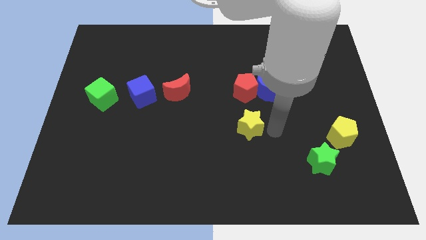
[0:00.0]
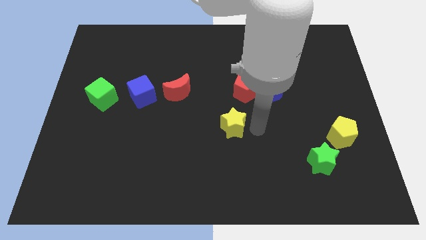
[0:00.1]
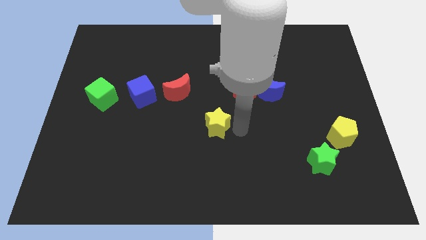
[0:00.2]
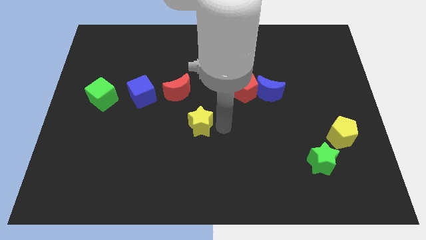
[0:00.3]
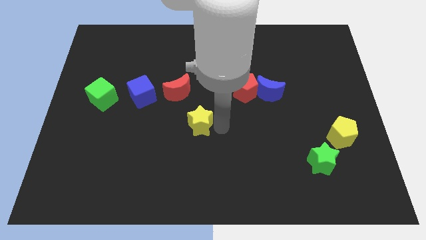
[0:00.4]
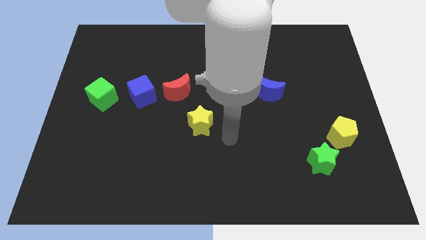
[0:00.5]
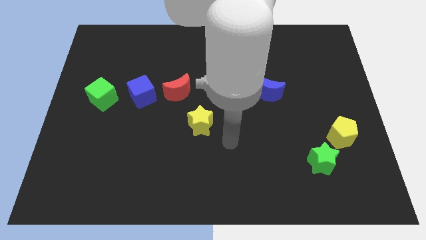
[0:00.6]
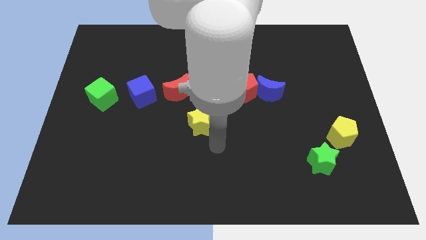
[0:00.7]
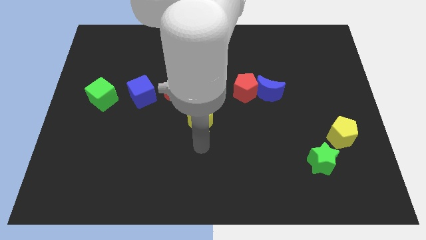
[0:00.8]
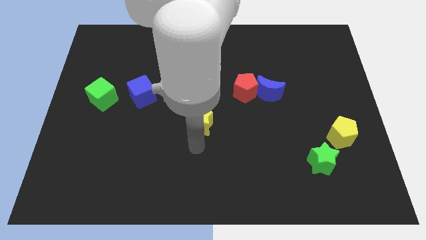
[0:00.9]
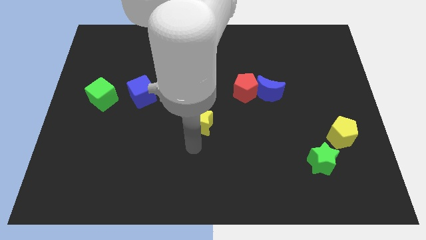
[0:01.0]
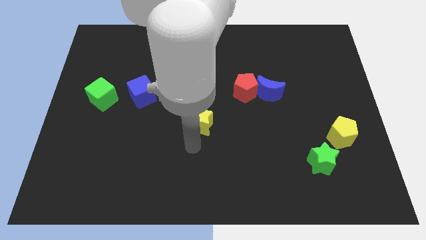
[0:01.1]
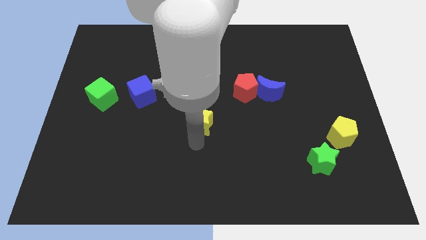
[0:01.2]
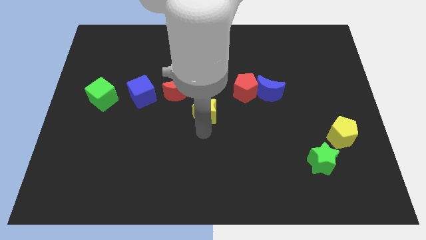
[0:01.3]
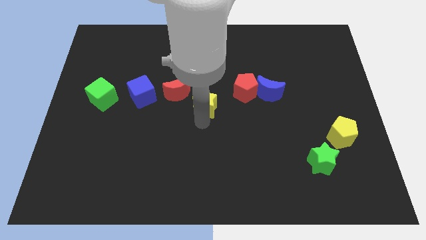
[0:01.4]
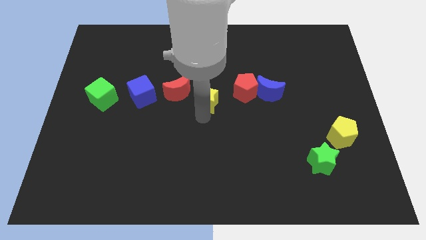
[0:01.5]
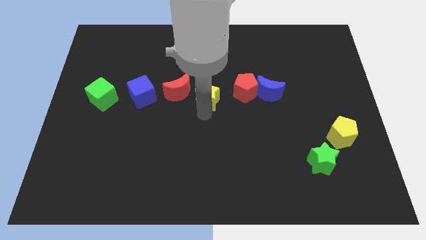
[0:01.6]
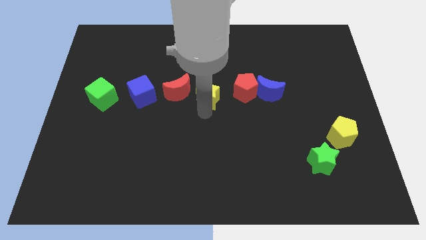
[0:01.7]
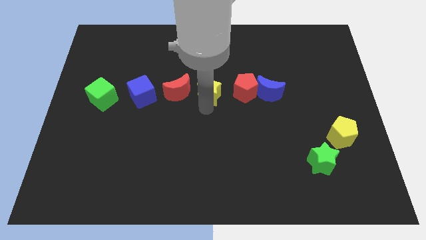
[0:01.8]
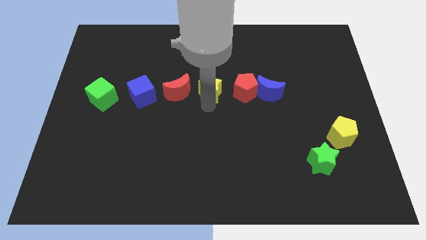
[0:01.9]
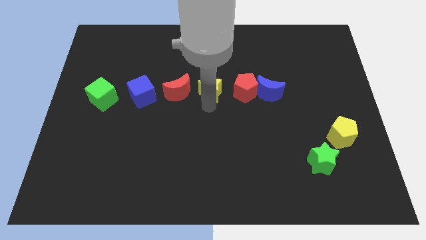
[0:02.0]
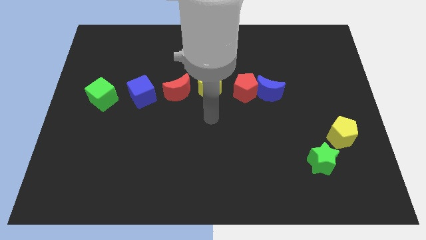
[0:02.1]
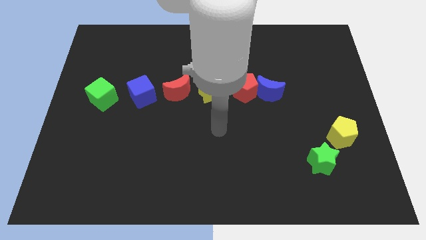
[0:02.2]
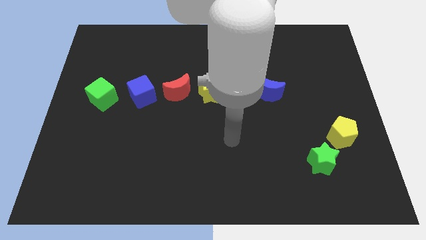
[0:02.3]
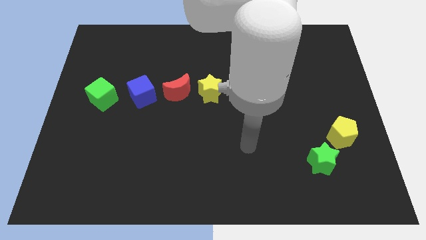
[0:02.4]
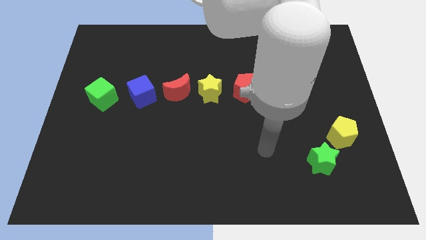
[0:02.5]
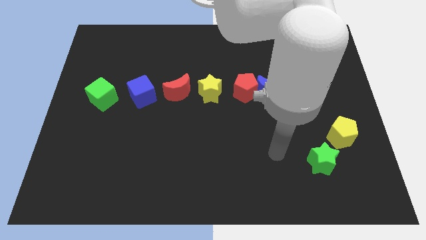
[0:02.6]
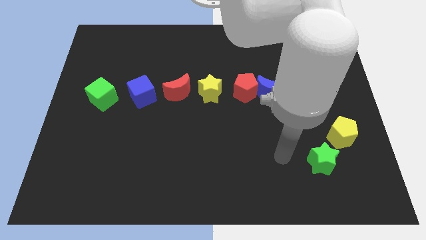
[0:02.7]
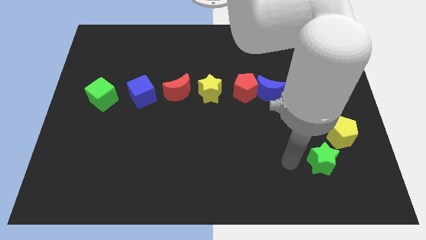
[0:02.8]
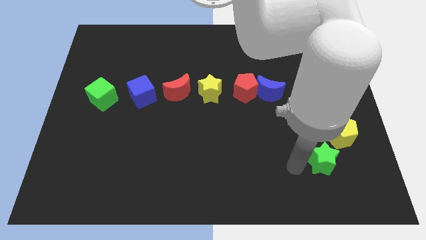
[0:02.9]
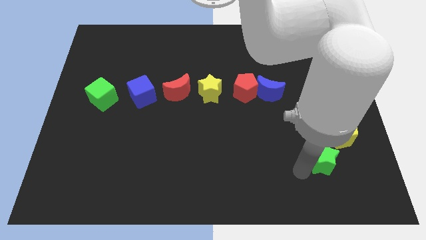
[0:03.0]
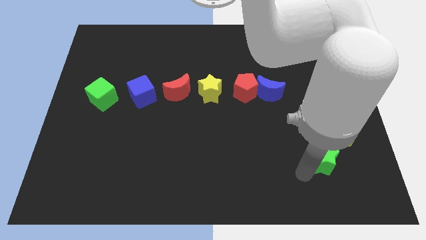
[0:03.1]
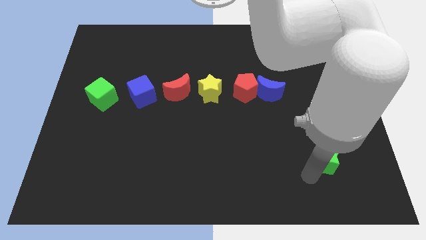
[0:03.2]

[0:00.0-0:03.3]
place the yellow star near the red crescent

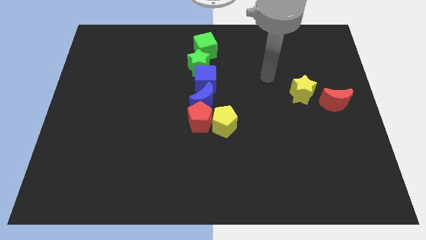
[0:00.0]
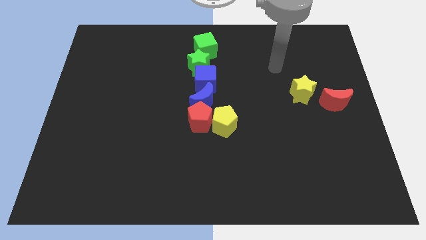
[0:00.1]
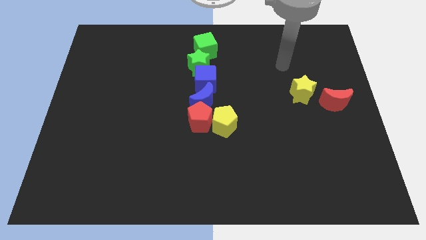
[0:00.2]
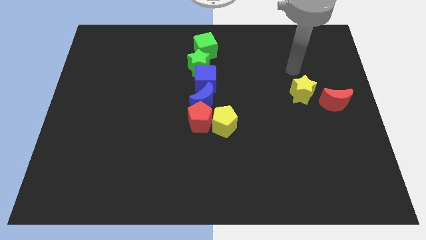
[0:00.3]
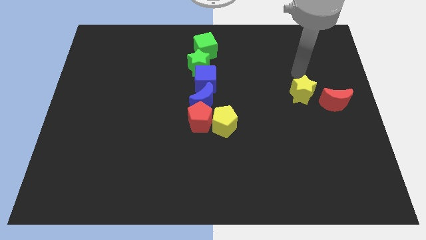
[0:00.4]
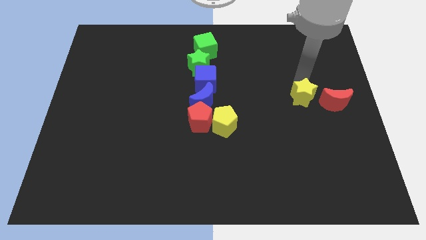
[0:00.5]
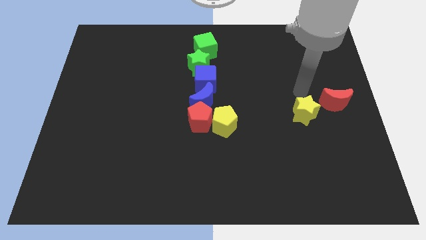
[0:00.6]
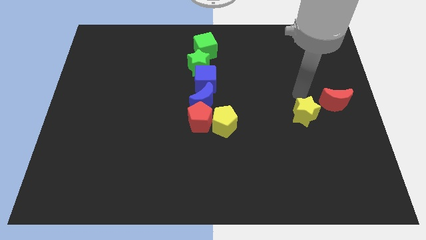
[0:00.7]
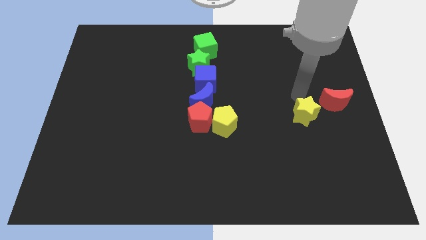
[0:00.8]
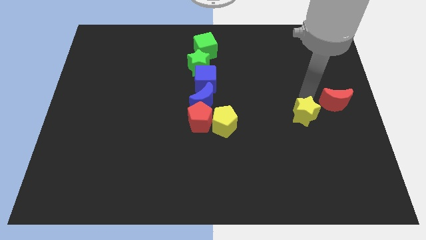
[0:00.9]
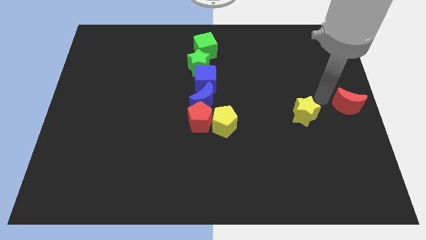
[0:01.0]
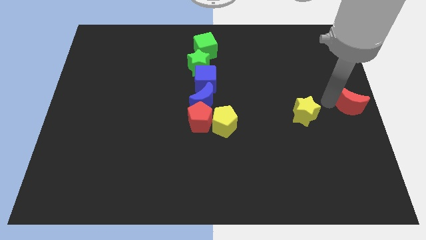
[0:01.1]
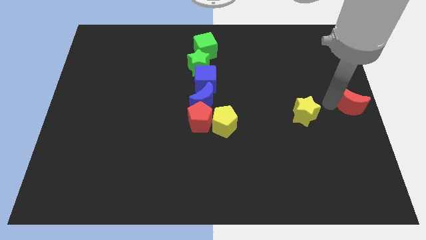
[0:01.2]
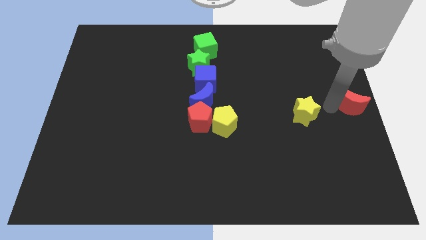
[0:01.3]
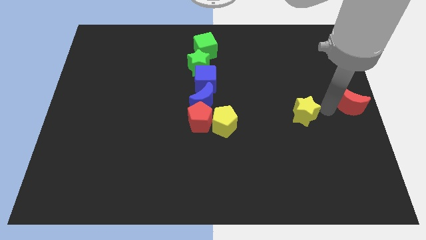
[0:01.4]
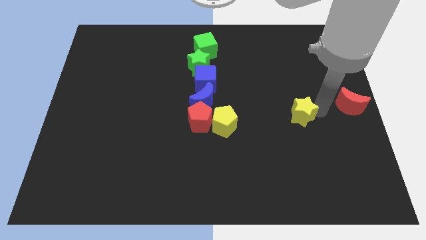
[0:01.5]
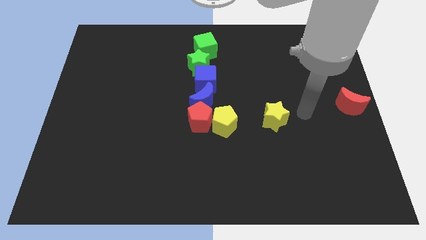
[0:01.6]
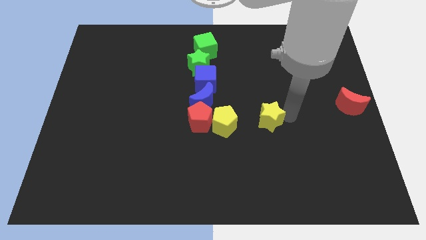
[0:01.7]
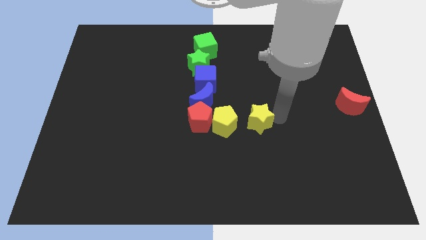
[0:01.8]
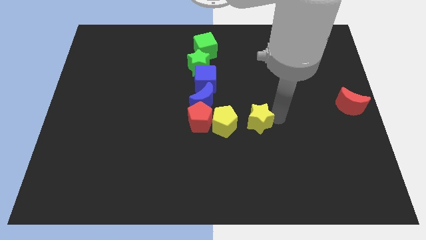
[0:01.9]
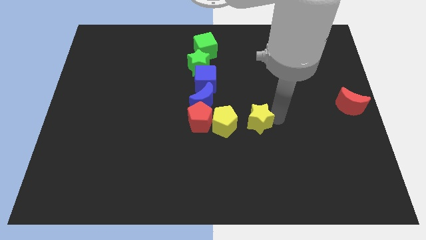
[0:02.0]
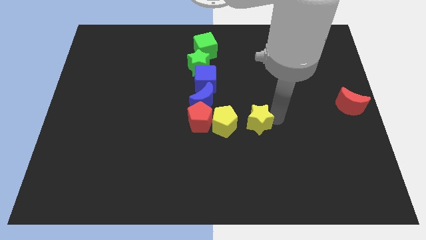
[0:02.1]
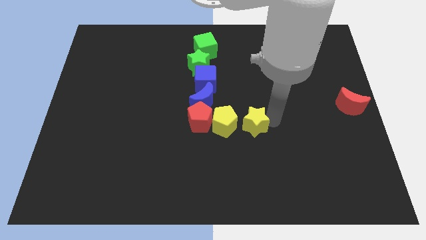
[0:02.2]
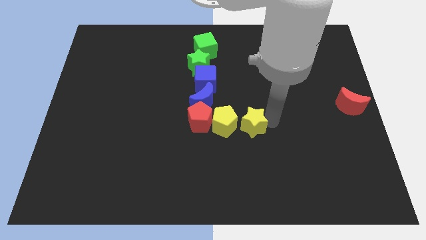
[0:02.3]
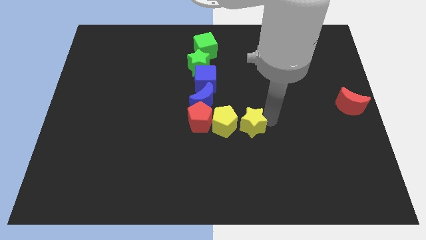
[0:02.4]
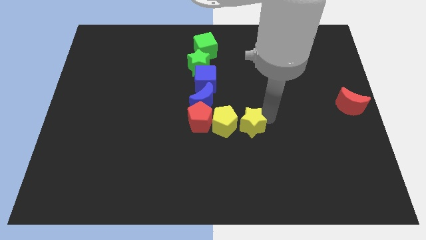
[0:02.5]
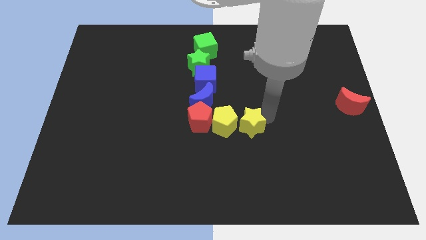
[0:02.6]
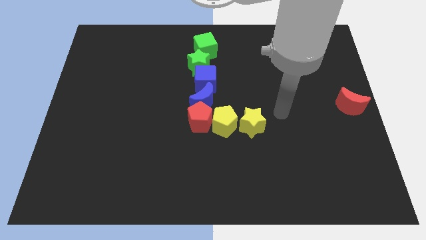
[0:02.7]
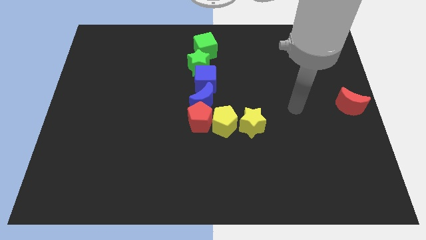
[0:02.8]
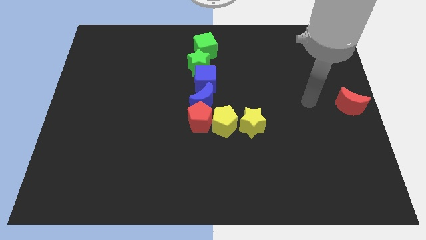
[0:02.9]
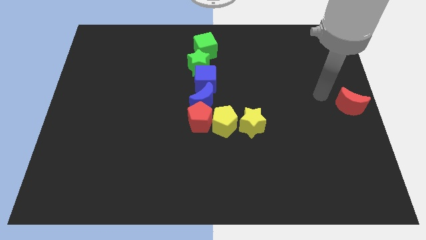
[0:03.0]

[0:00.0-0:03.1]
drag the yellow star to the right side of the yellow pentagon

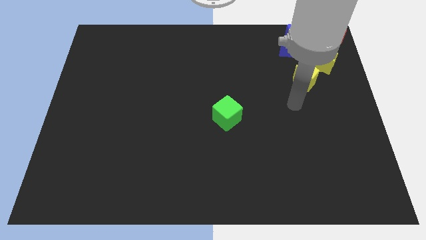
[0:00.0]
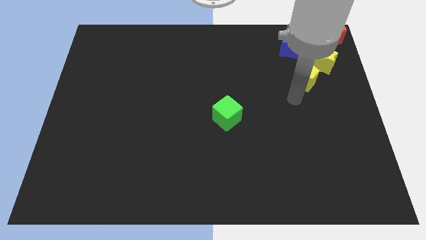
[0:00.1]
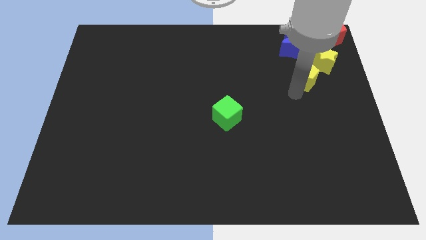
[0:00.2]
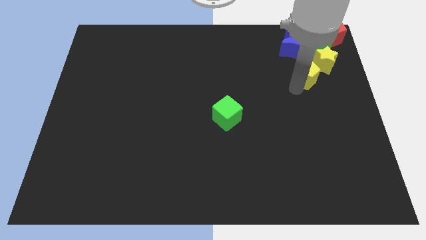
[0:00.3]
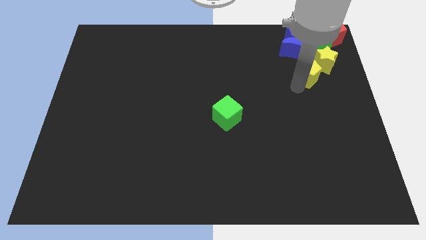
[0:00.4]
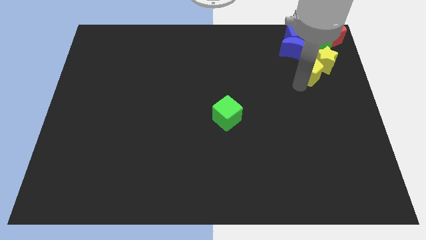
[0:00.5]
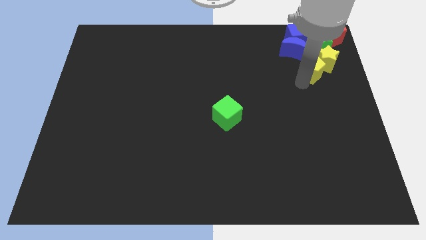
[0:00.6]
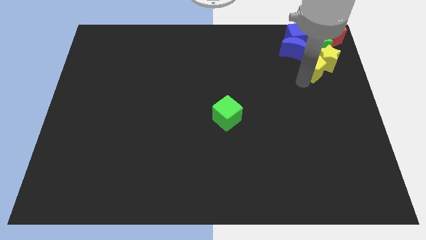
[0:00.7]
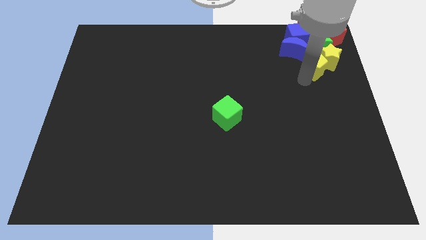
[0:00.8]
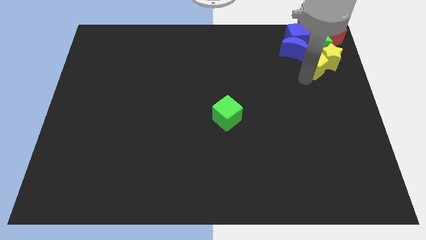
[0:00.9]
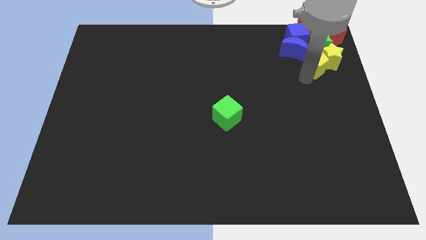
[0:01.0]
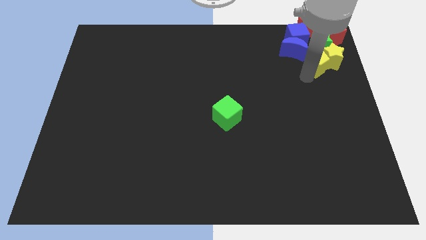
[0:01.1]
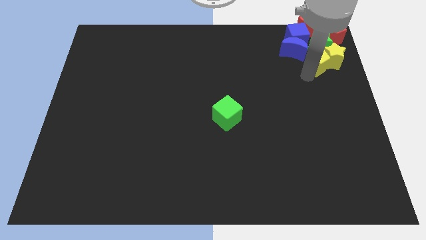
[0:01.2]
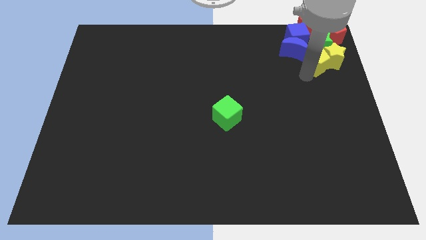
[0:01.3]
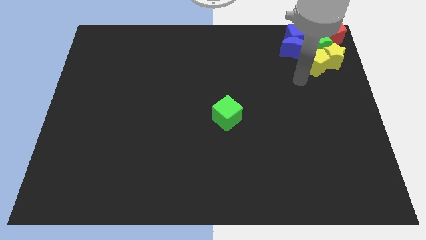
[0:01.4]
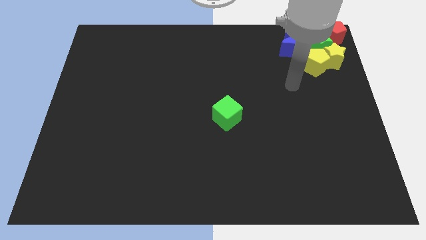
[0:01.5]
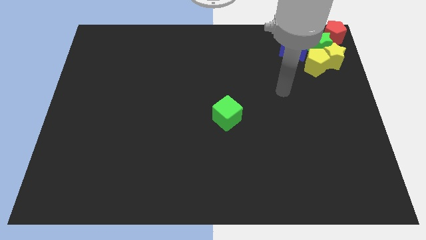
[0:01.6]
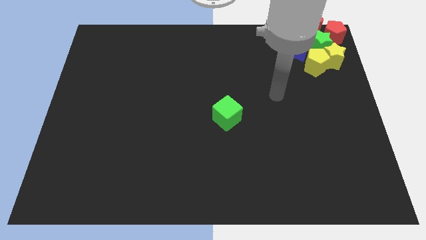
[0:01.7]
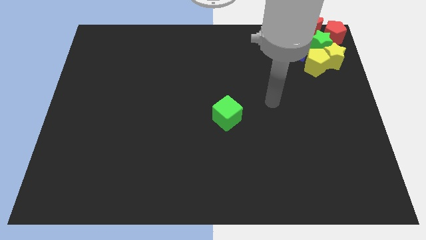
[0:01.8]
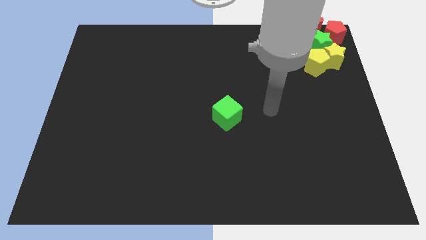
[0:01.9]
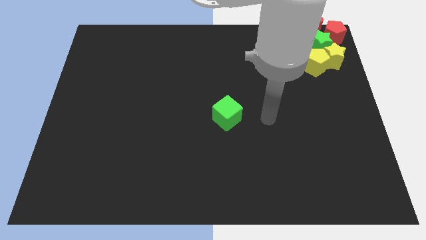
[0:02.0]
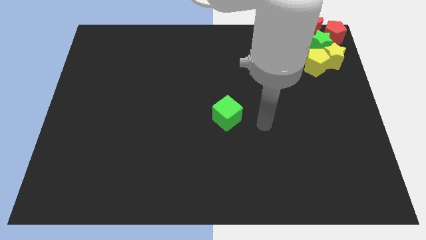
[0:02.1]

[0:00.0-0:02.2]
push yellow blocks into the group of blocks

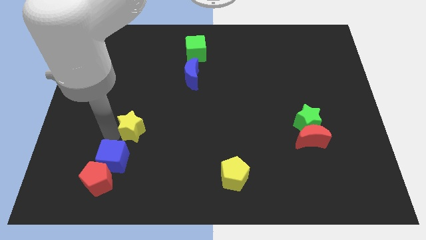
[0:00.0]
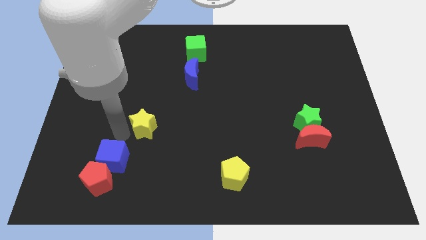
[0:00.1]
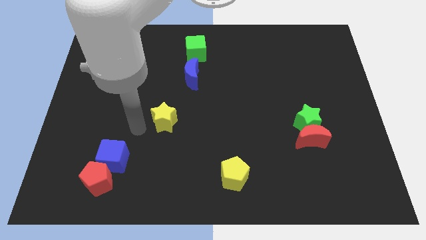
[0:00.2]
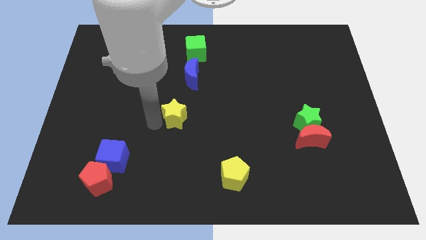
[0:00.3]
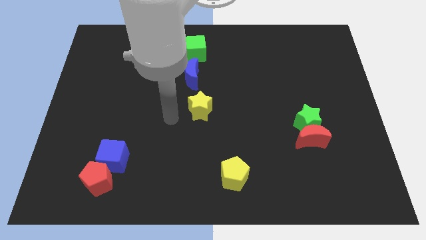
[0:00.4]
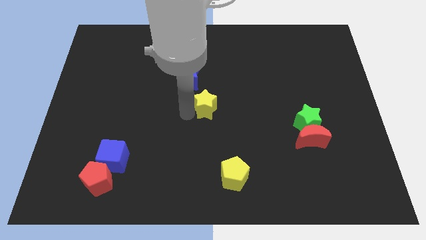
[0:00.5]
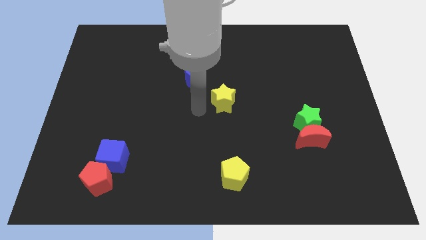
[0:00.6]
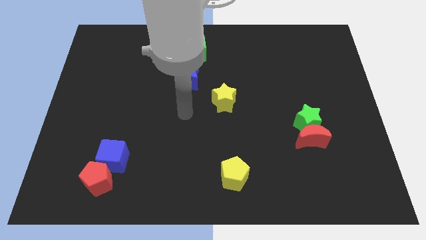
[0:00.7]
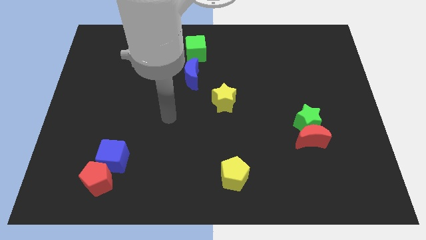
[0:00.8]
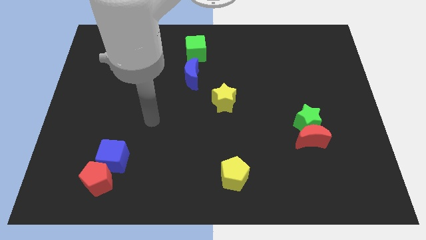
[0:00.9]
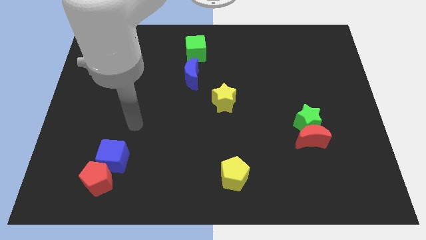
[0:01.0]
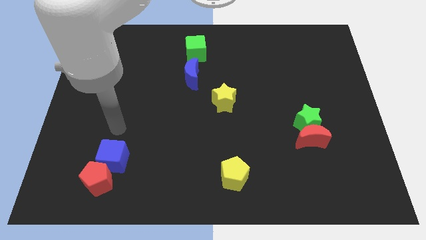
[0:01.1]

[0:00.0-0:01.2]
move the yellow star to the bottom right of the blue crescent
